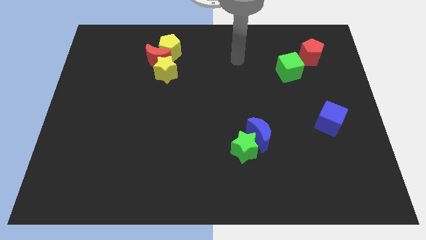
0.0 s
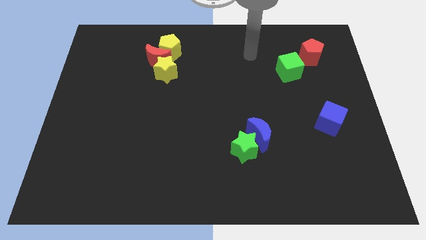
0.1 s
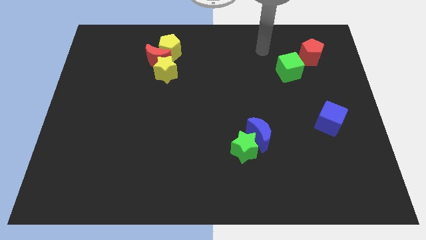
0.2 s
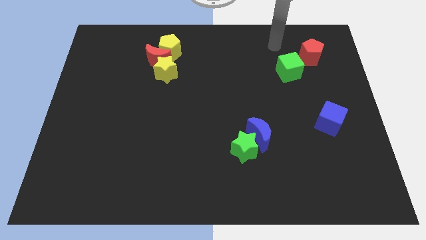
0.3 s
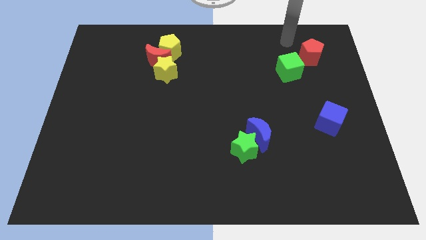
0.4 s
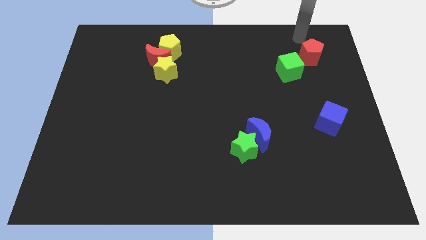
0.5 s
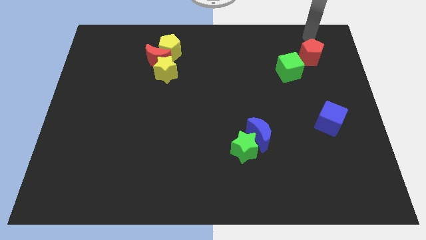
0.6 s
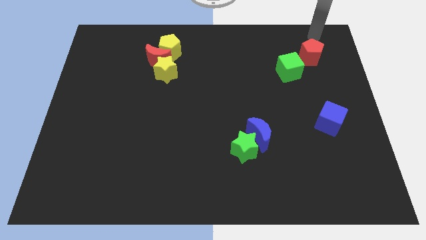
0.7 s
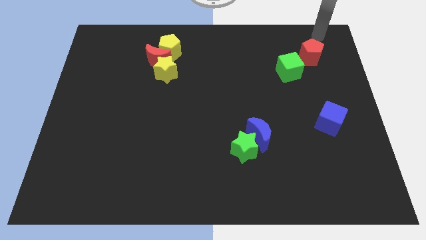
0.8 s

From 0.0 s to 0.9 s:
move your arm towards the top right corner of the board

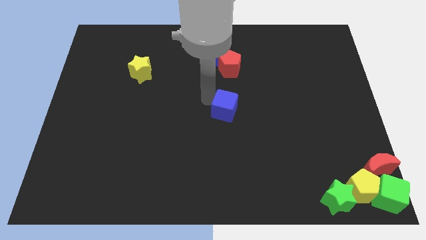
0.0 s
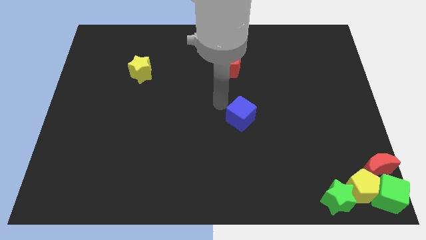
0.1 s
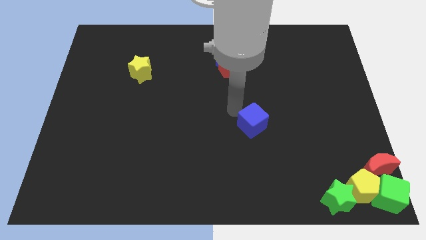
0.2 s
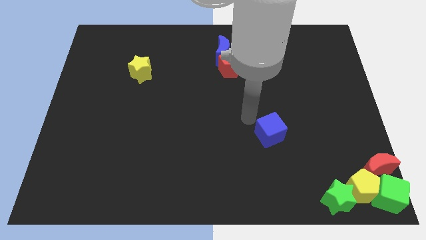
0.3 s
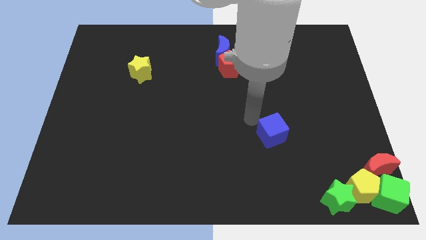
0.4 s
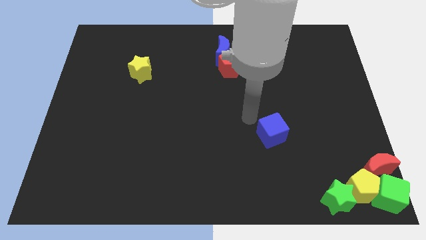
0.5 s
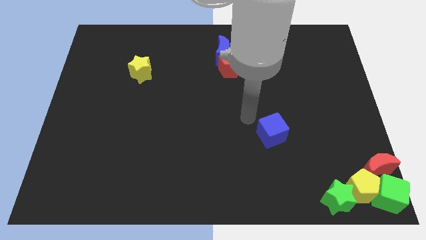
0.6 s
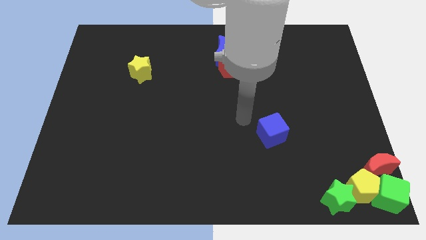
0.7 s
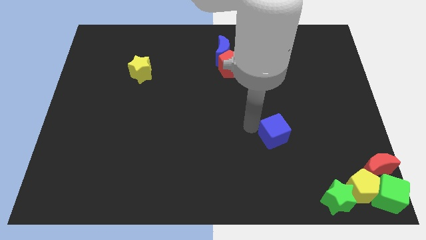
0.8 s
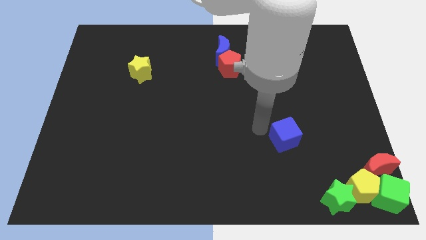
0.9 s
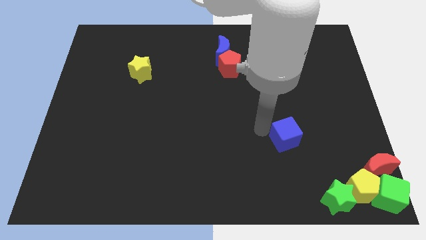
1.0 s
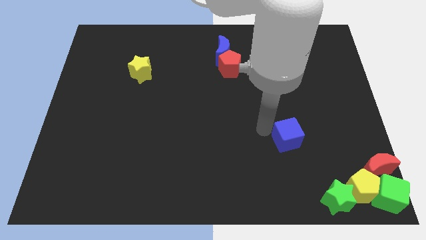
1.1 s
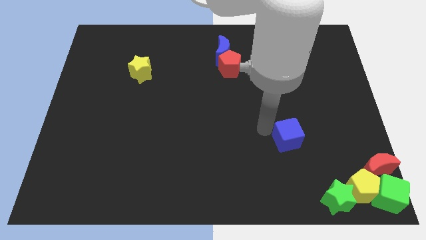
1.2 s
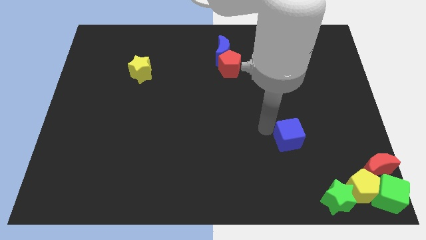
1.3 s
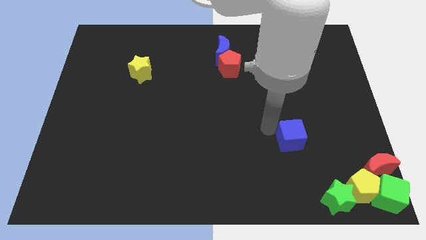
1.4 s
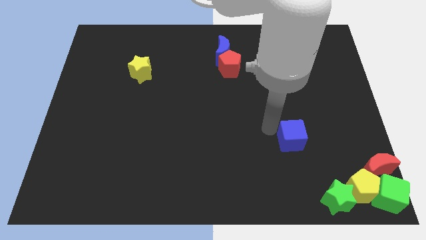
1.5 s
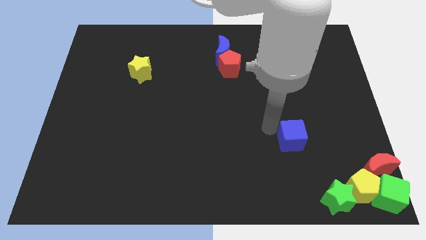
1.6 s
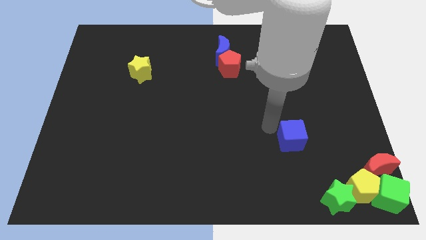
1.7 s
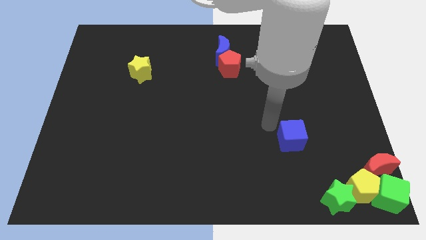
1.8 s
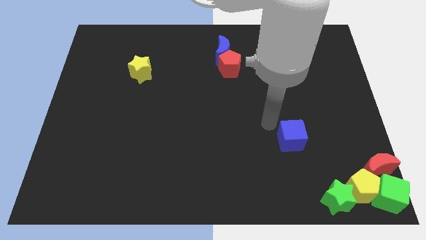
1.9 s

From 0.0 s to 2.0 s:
push the blue cube to the right side of the board

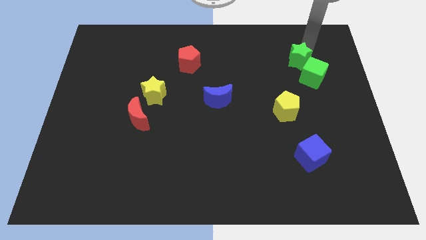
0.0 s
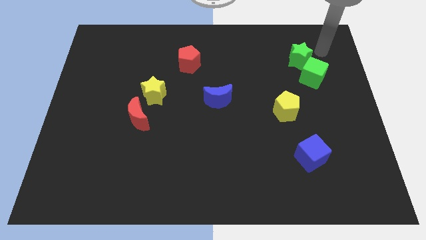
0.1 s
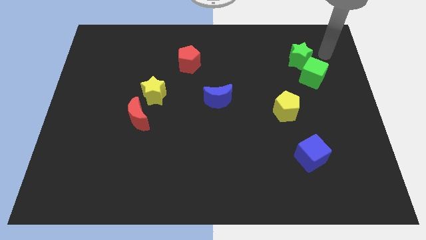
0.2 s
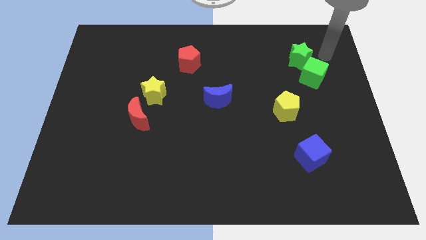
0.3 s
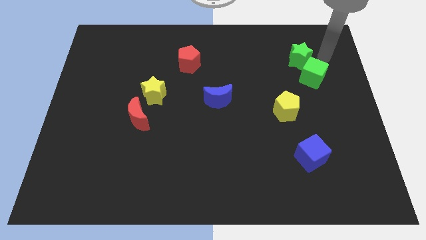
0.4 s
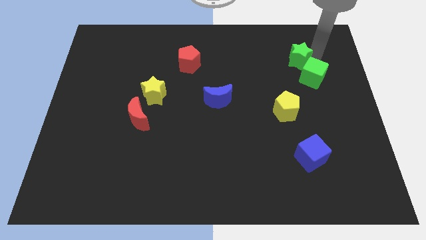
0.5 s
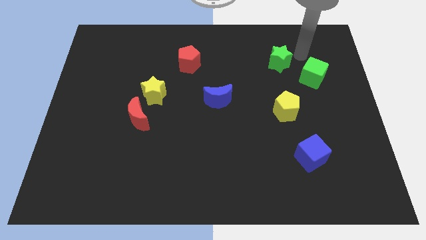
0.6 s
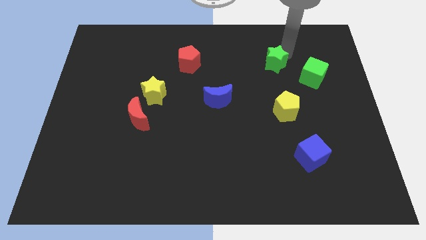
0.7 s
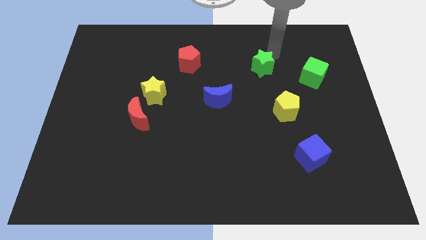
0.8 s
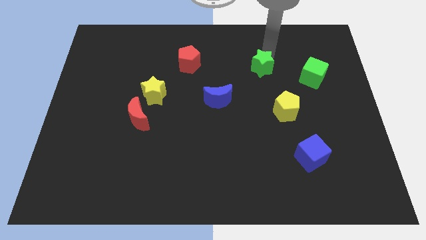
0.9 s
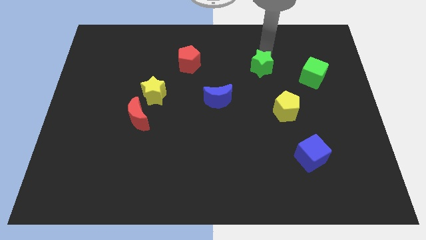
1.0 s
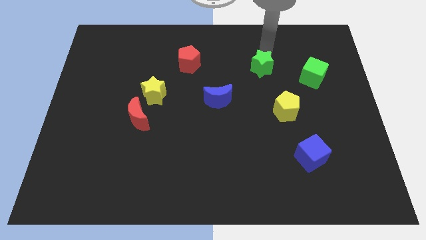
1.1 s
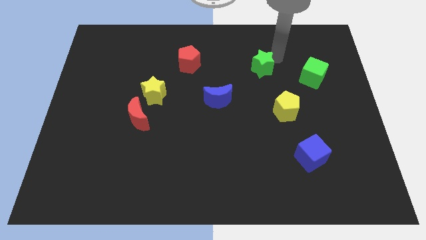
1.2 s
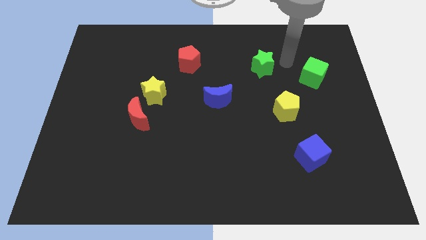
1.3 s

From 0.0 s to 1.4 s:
push green star towards left sid of the board

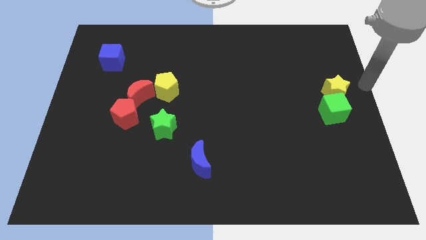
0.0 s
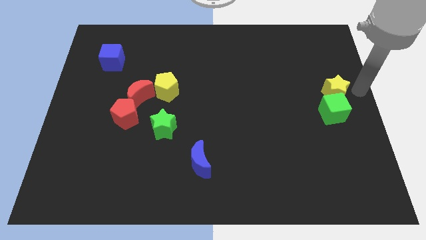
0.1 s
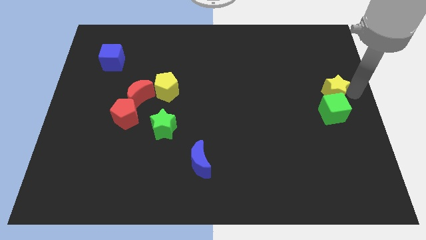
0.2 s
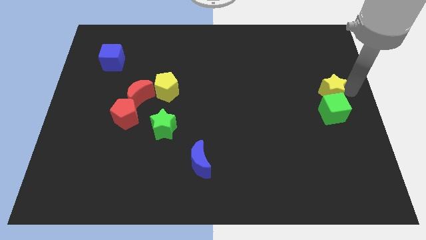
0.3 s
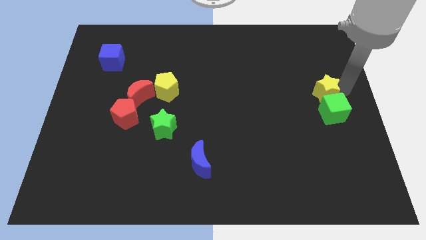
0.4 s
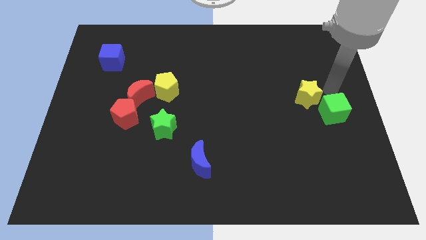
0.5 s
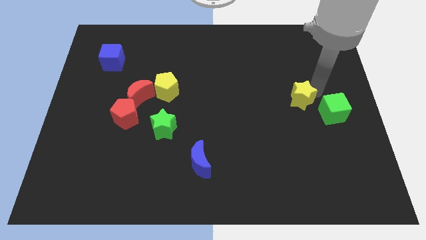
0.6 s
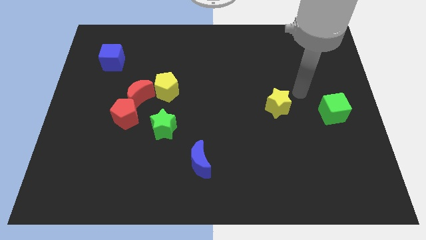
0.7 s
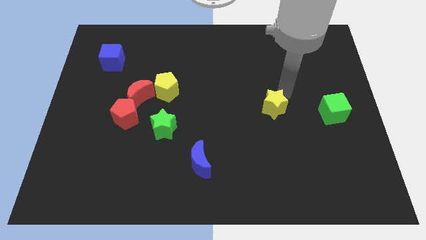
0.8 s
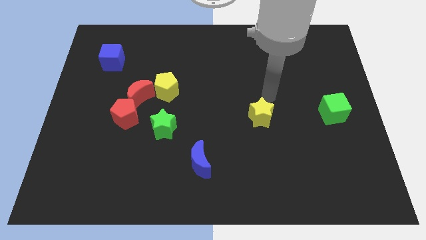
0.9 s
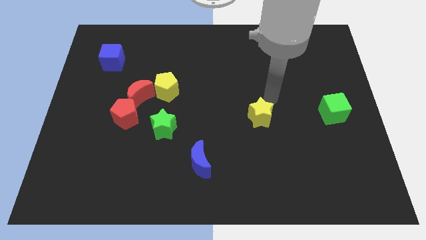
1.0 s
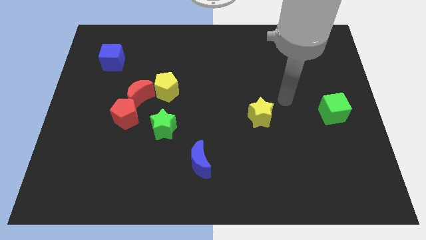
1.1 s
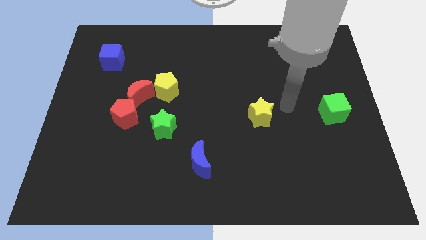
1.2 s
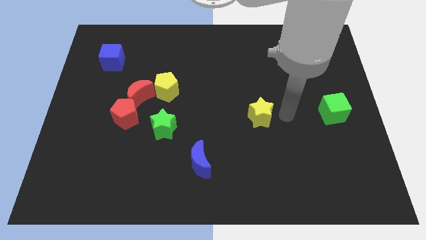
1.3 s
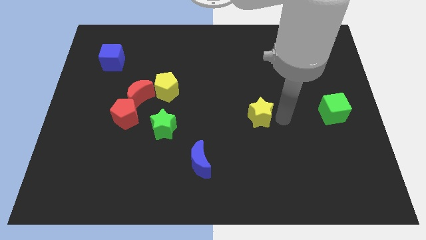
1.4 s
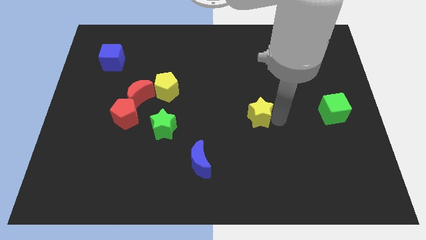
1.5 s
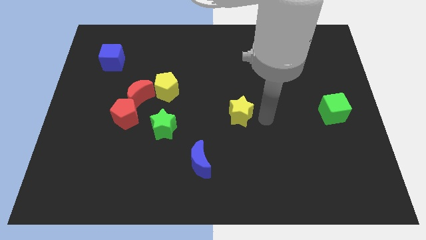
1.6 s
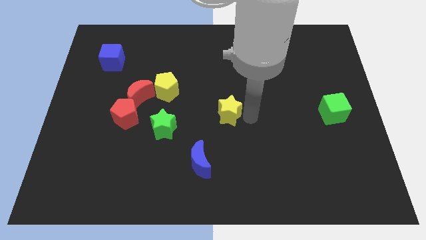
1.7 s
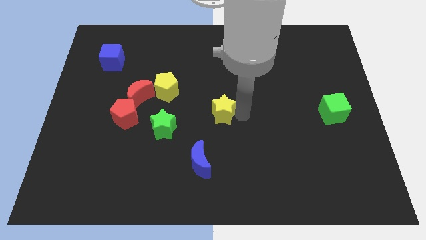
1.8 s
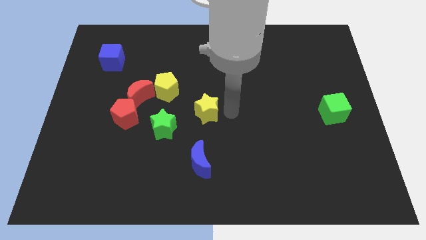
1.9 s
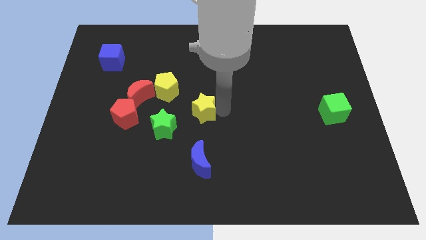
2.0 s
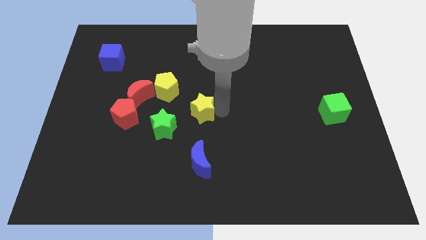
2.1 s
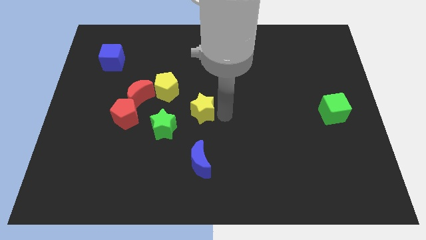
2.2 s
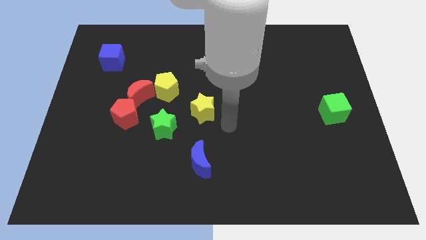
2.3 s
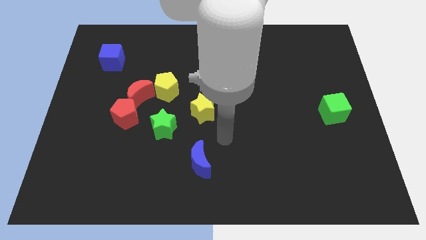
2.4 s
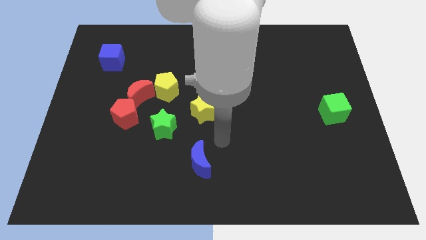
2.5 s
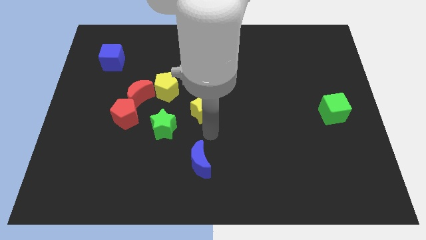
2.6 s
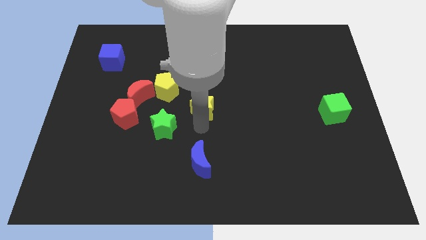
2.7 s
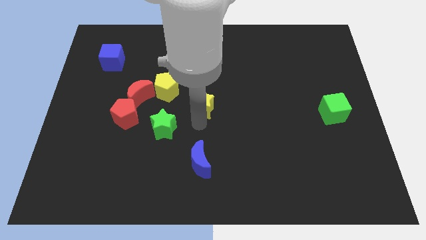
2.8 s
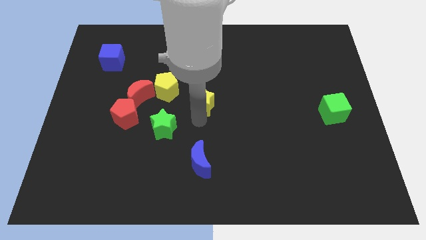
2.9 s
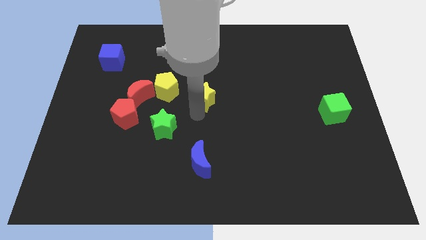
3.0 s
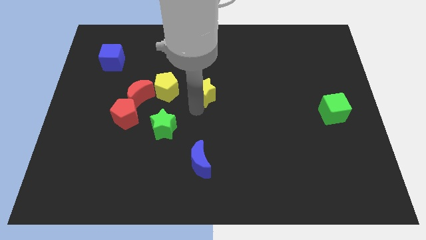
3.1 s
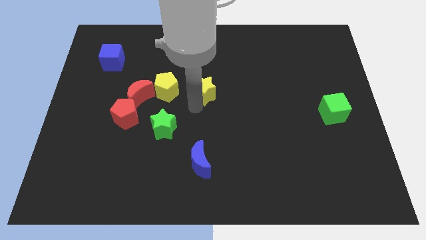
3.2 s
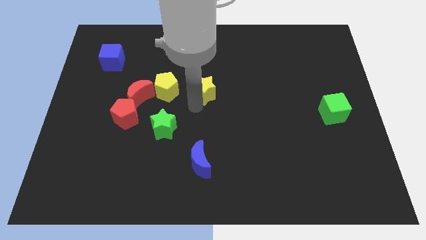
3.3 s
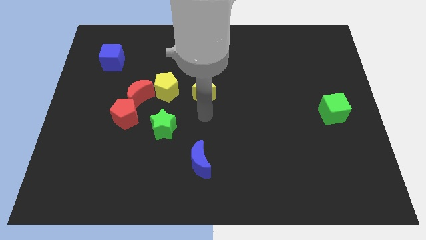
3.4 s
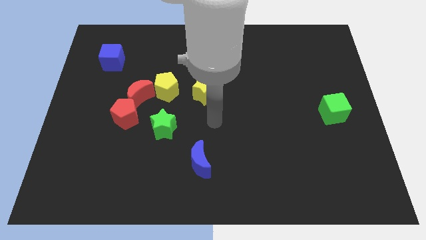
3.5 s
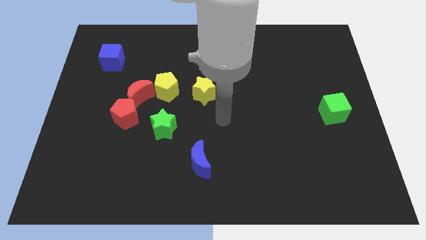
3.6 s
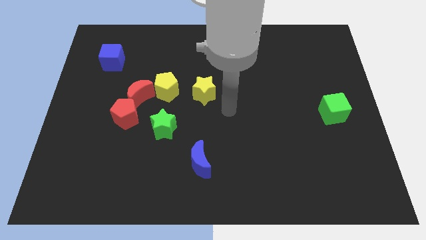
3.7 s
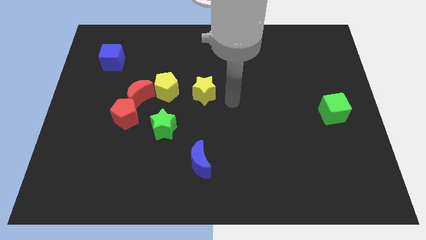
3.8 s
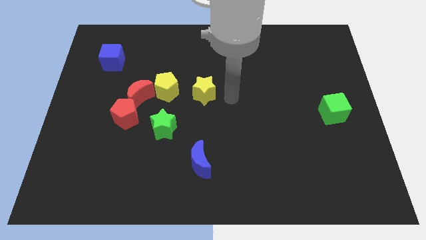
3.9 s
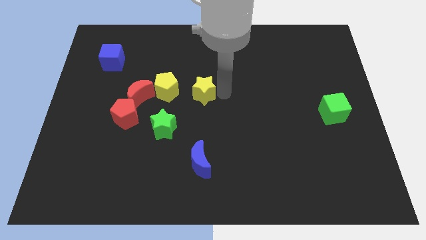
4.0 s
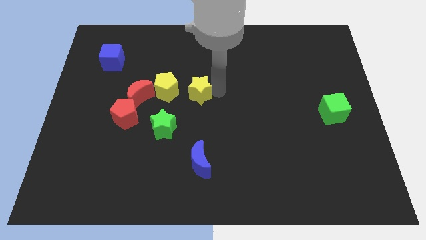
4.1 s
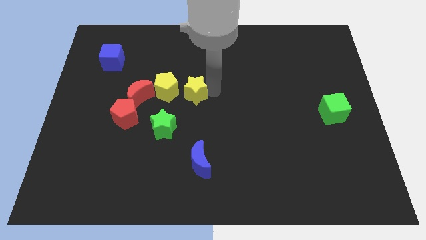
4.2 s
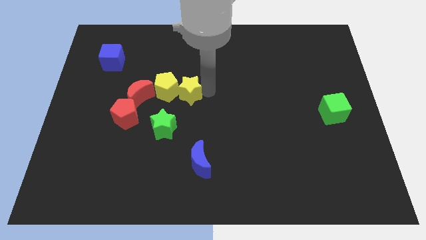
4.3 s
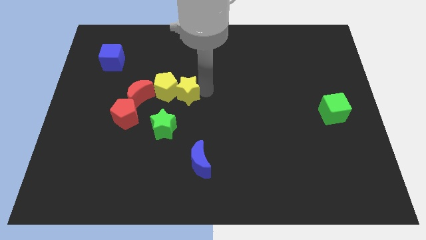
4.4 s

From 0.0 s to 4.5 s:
separate yellow star from the green cube

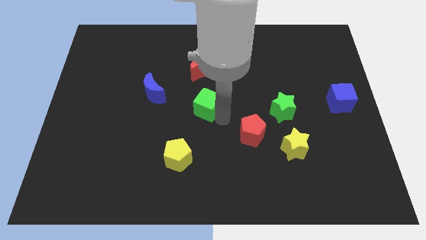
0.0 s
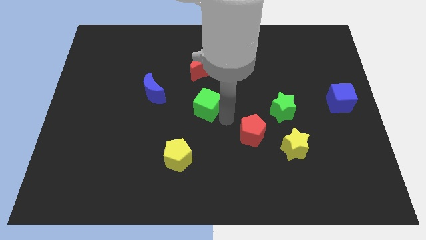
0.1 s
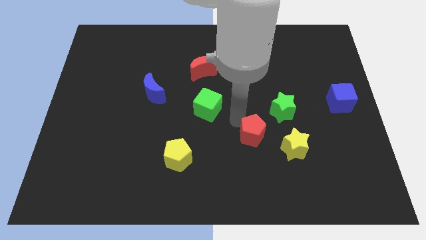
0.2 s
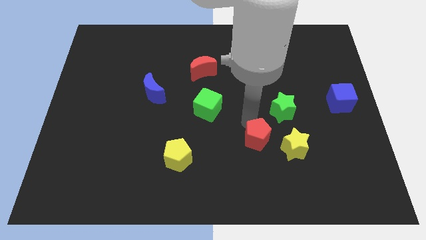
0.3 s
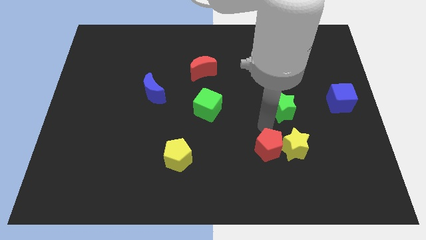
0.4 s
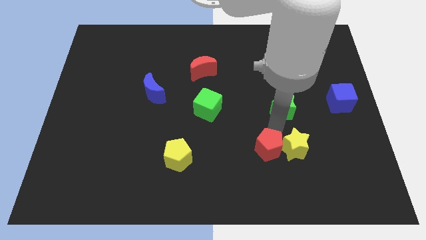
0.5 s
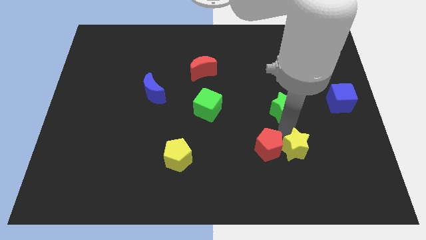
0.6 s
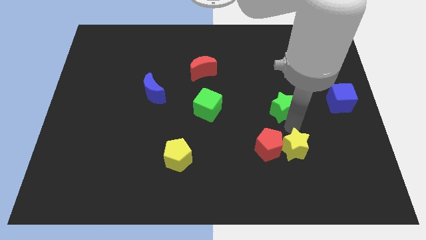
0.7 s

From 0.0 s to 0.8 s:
push the red pentagon close to the yellow star
